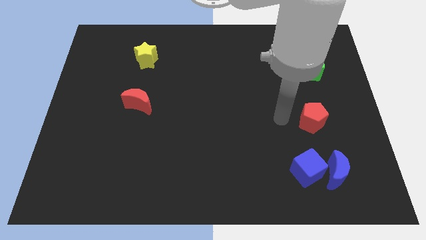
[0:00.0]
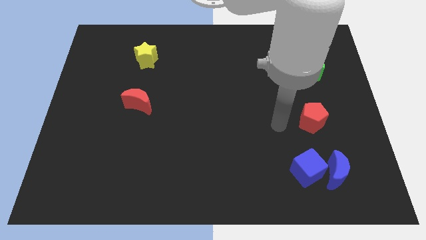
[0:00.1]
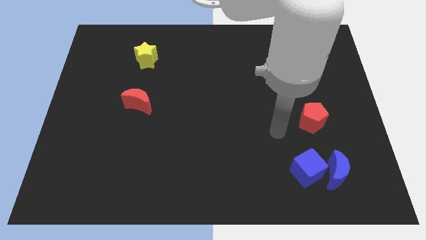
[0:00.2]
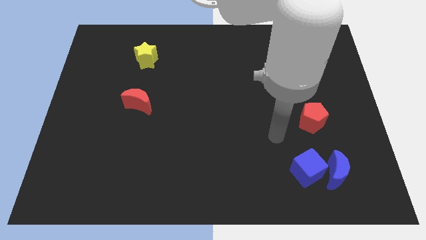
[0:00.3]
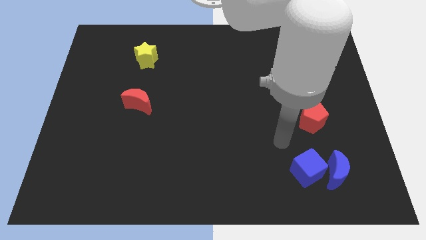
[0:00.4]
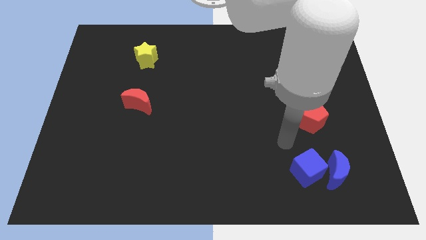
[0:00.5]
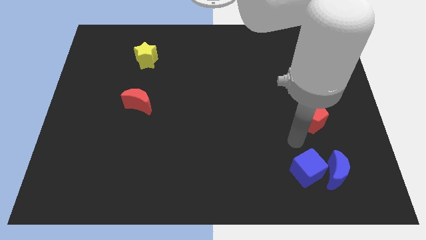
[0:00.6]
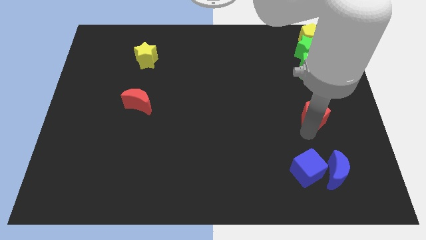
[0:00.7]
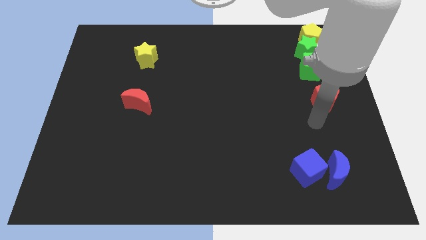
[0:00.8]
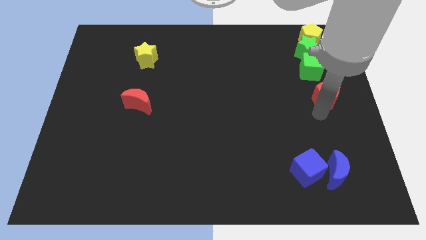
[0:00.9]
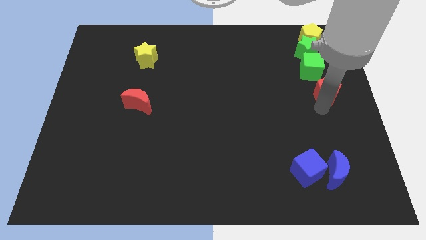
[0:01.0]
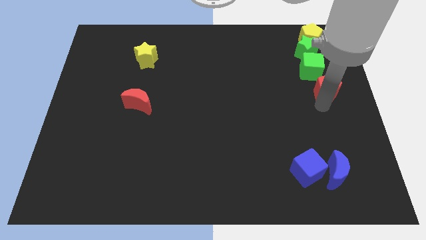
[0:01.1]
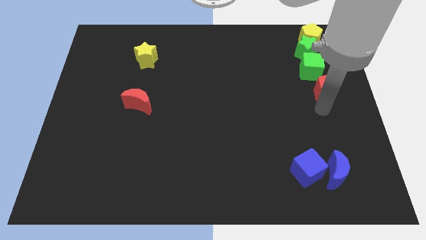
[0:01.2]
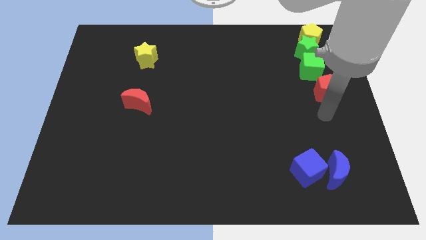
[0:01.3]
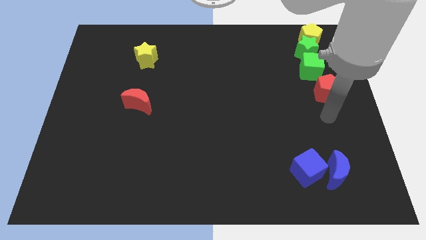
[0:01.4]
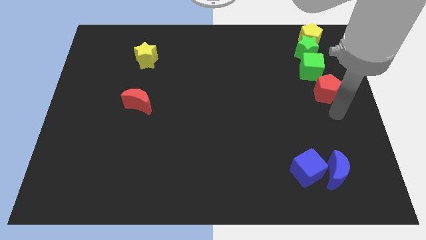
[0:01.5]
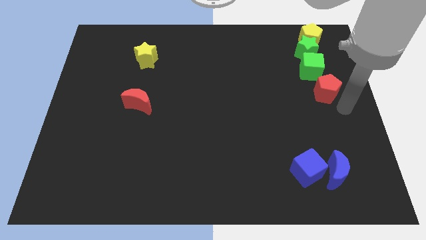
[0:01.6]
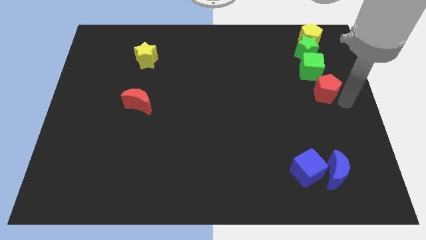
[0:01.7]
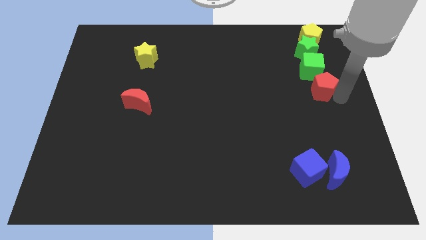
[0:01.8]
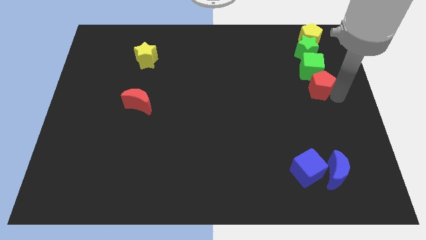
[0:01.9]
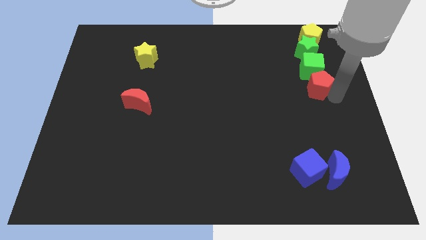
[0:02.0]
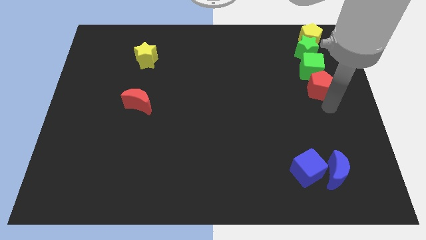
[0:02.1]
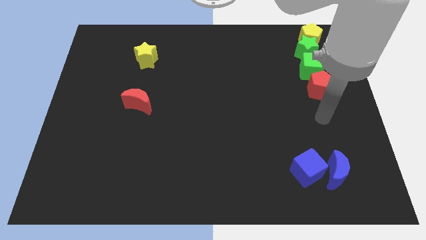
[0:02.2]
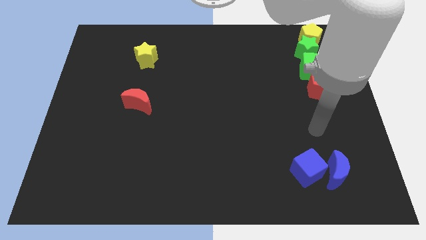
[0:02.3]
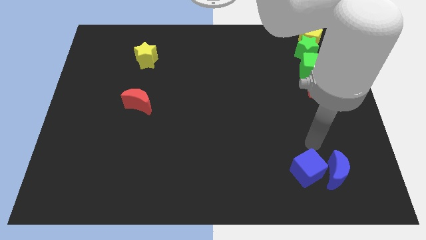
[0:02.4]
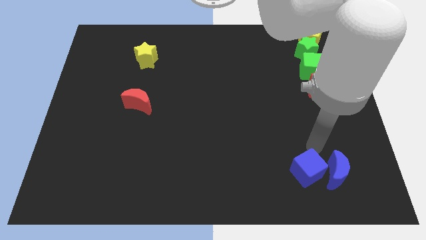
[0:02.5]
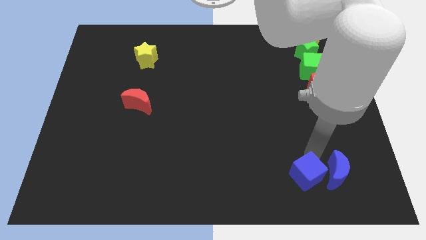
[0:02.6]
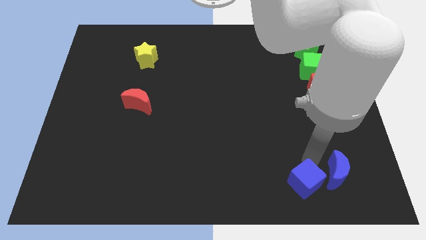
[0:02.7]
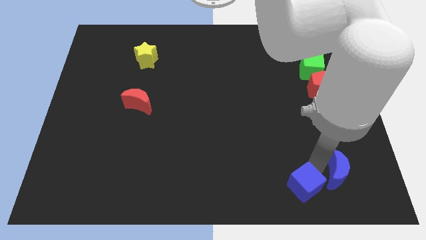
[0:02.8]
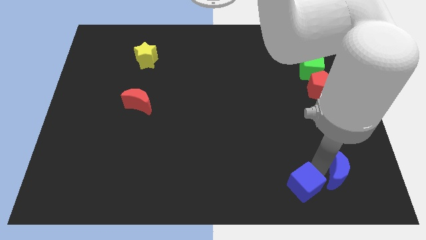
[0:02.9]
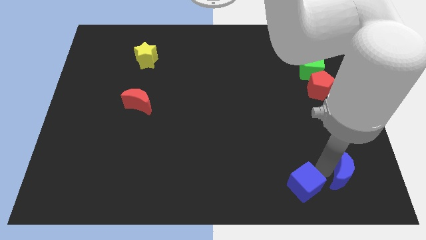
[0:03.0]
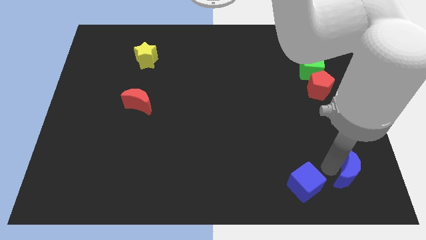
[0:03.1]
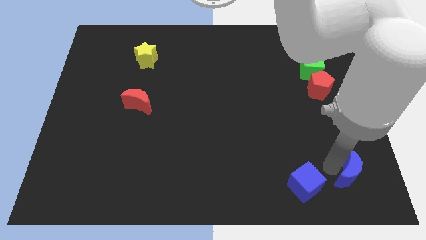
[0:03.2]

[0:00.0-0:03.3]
push the red pentagon towards the green cube

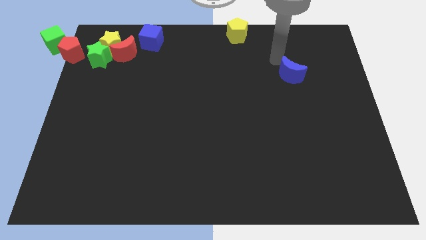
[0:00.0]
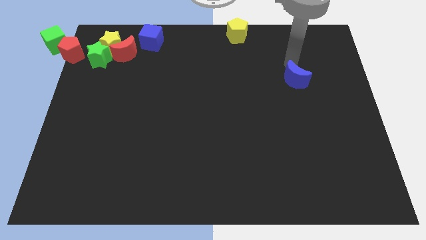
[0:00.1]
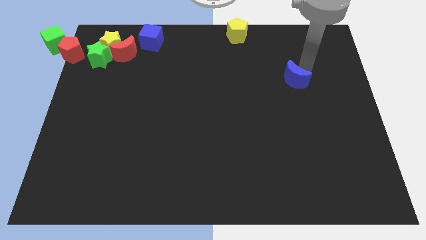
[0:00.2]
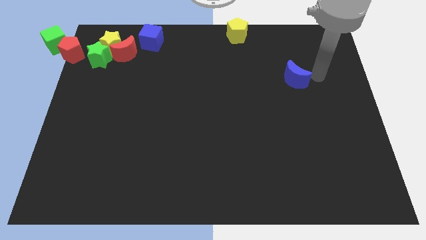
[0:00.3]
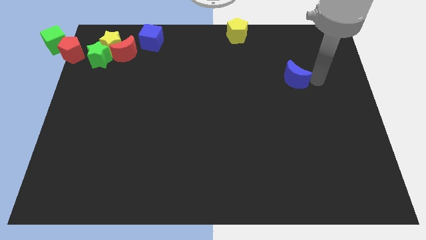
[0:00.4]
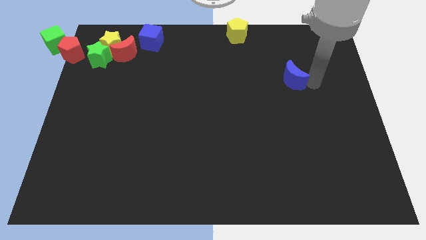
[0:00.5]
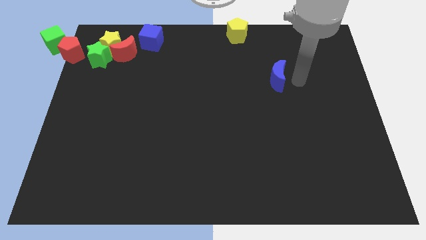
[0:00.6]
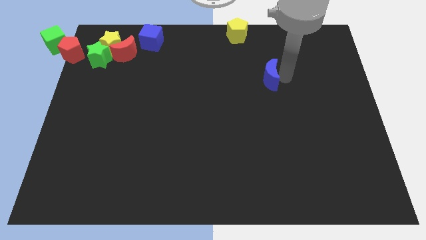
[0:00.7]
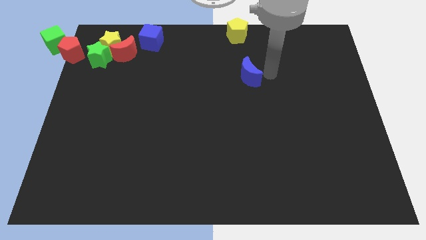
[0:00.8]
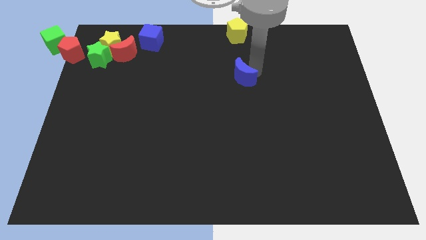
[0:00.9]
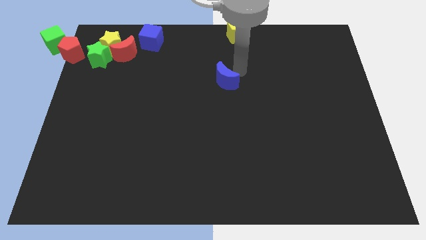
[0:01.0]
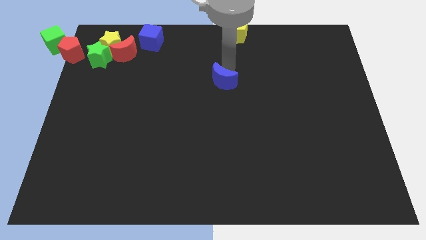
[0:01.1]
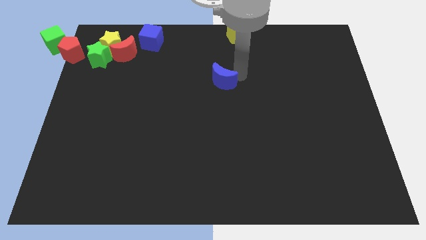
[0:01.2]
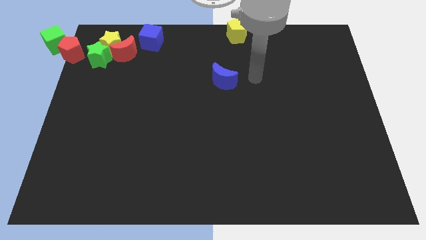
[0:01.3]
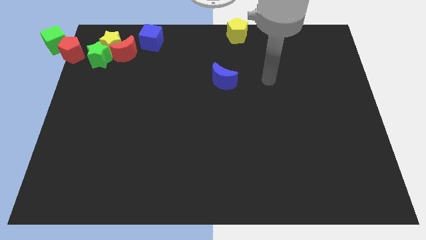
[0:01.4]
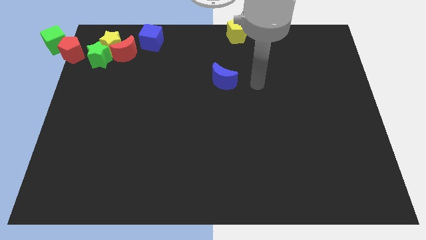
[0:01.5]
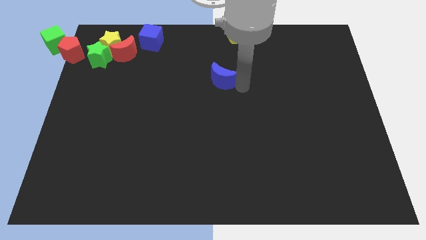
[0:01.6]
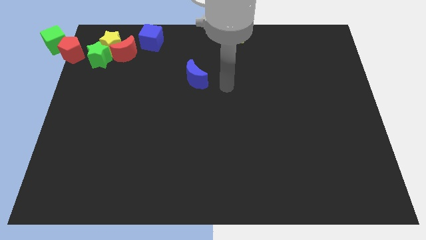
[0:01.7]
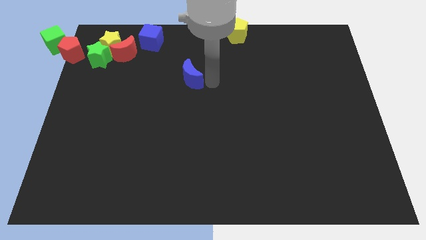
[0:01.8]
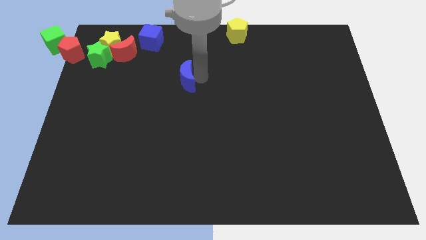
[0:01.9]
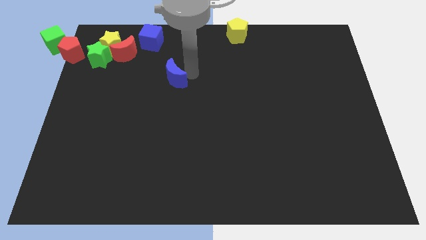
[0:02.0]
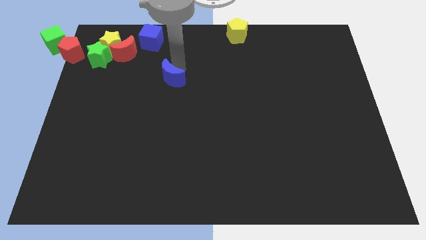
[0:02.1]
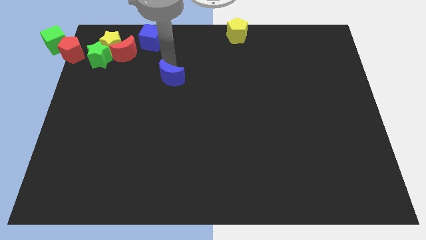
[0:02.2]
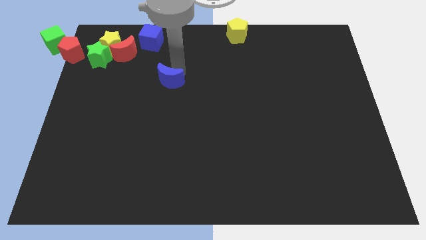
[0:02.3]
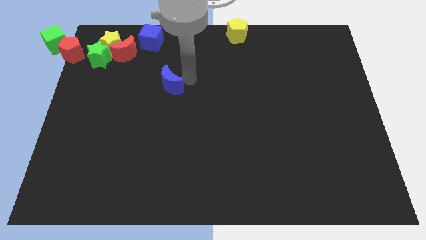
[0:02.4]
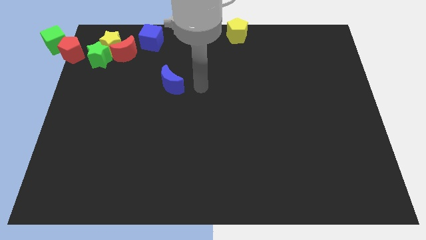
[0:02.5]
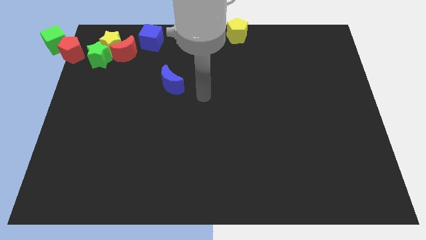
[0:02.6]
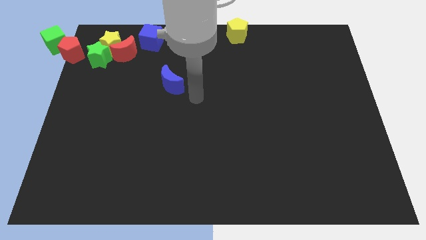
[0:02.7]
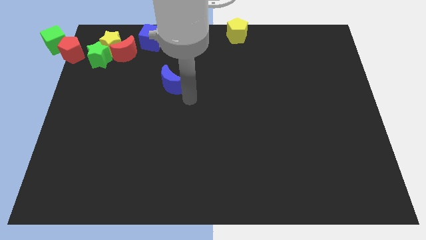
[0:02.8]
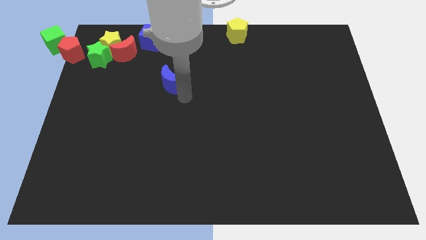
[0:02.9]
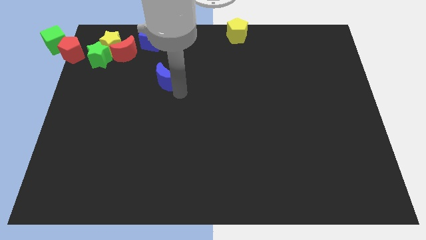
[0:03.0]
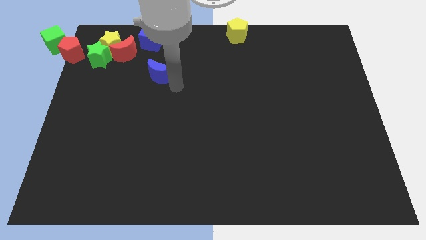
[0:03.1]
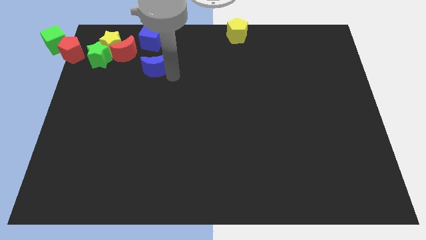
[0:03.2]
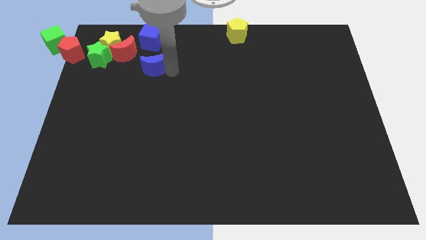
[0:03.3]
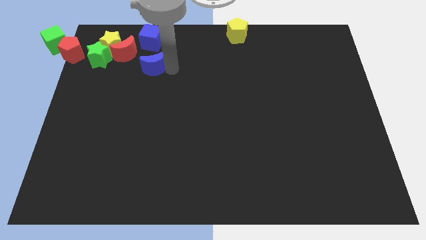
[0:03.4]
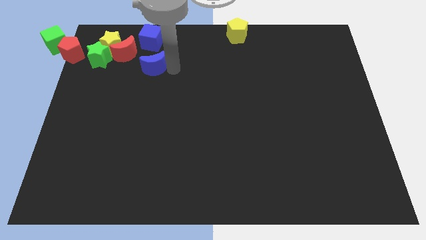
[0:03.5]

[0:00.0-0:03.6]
place the blue moon below the blue cube

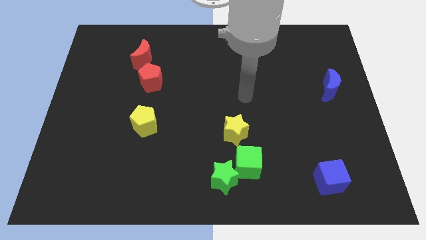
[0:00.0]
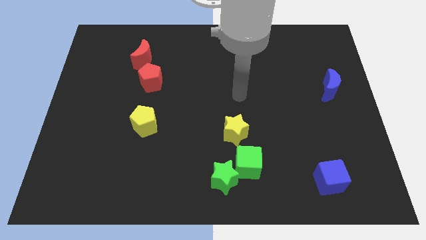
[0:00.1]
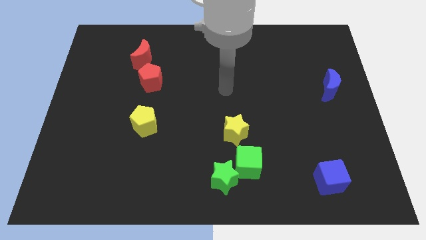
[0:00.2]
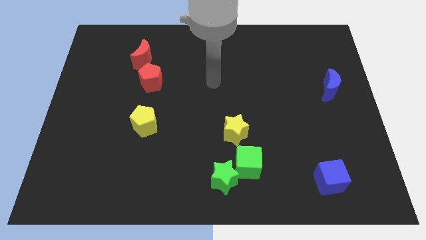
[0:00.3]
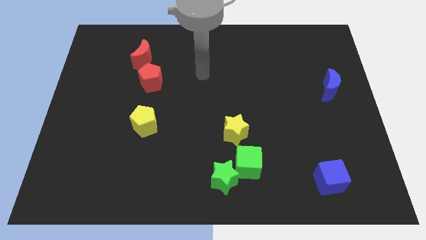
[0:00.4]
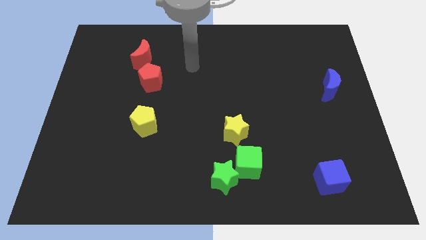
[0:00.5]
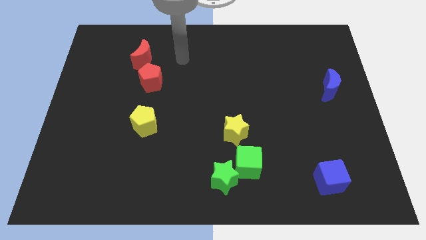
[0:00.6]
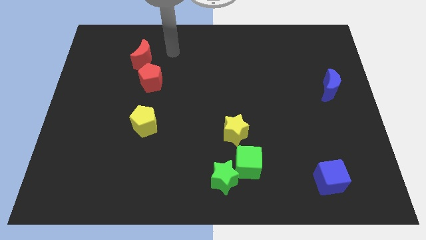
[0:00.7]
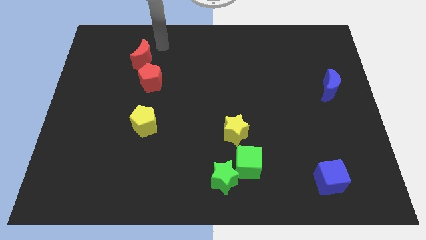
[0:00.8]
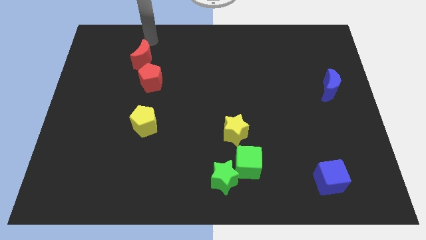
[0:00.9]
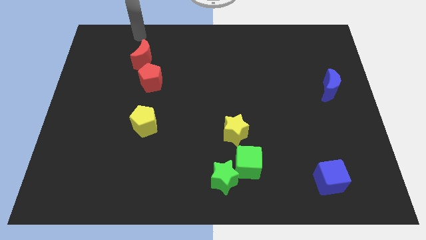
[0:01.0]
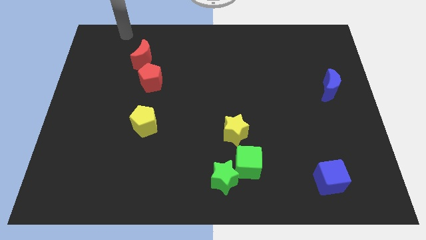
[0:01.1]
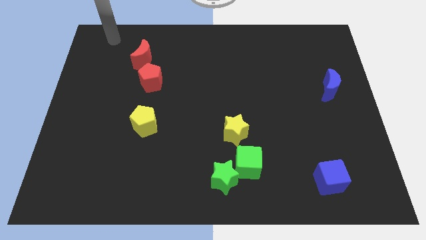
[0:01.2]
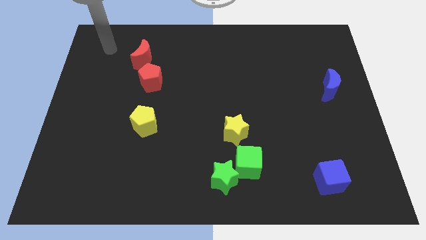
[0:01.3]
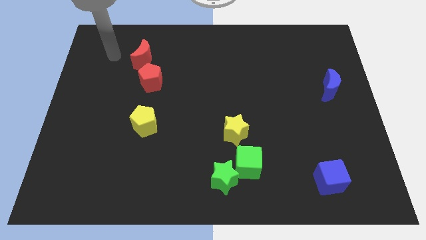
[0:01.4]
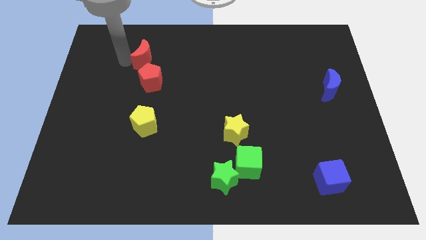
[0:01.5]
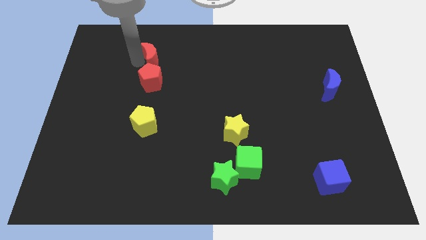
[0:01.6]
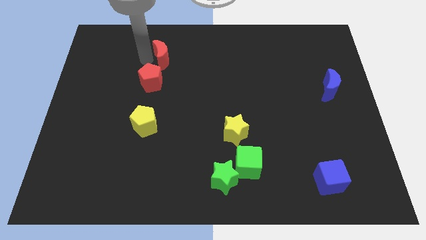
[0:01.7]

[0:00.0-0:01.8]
place red moon slightly to the right

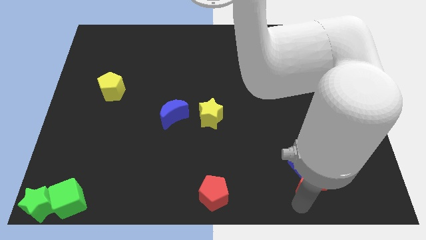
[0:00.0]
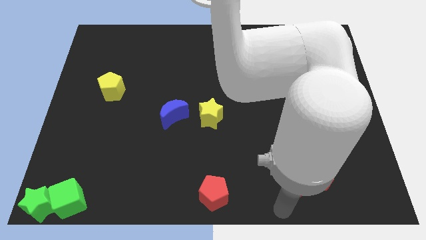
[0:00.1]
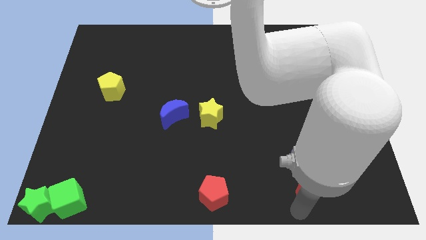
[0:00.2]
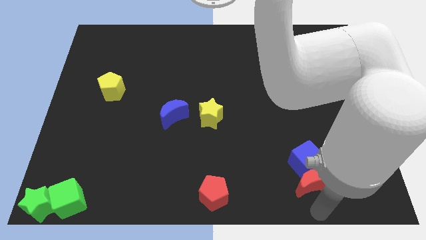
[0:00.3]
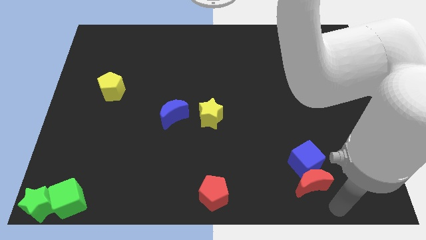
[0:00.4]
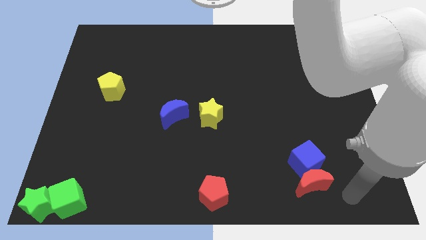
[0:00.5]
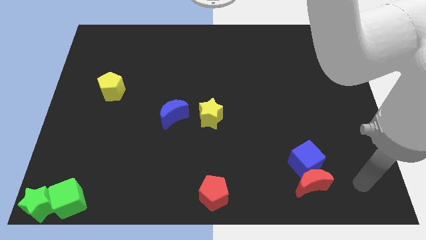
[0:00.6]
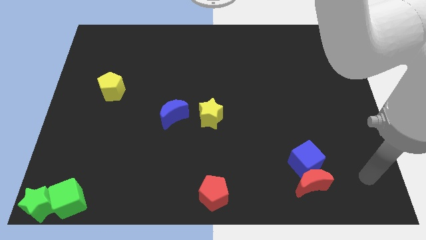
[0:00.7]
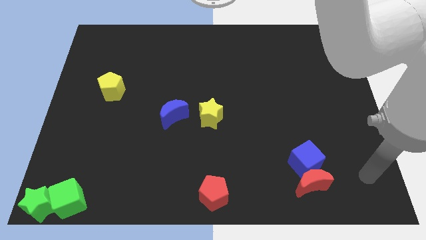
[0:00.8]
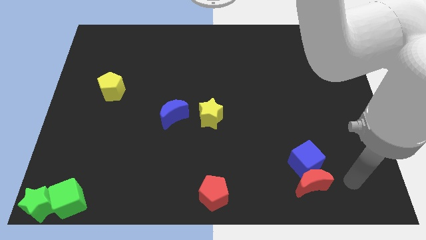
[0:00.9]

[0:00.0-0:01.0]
move your arm away from red moon
